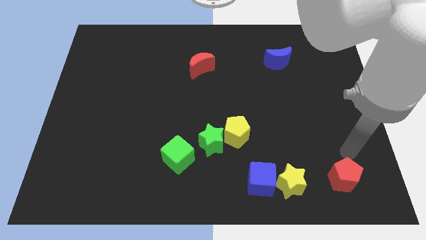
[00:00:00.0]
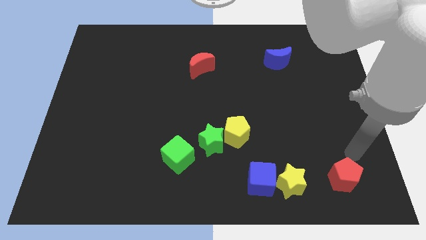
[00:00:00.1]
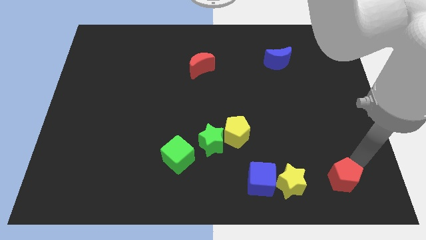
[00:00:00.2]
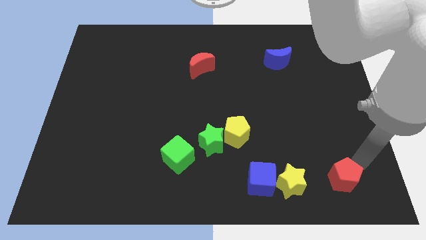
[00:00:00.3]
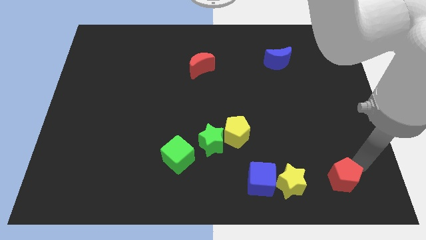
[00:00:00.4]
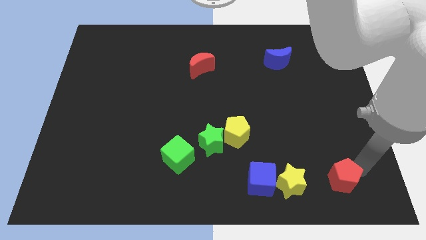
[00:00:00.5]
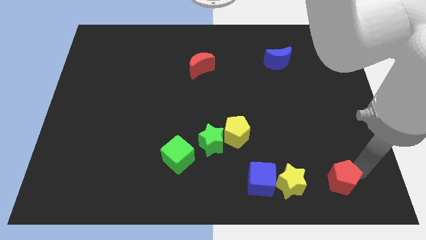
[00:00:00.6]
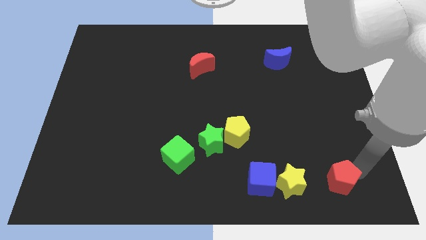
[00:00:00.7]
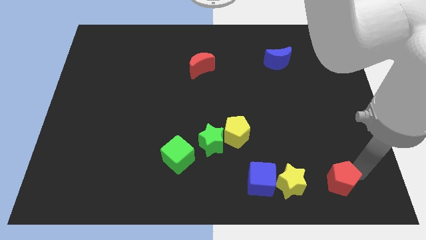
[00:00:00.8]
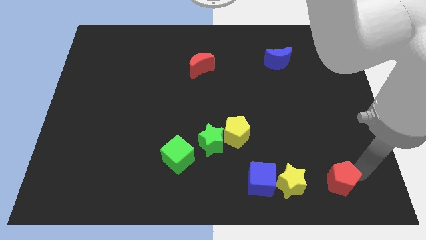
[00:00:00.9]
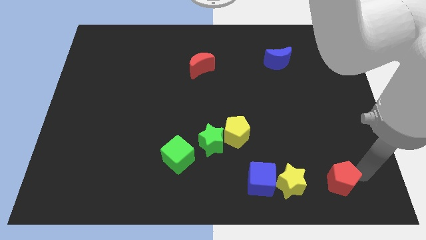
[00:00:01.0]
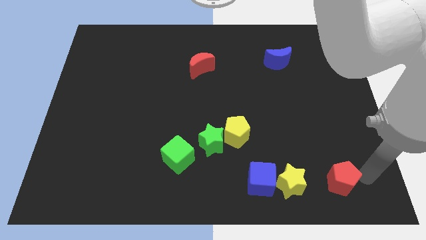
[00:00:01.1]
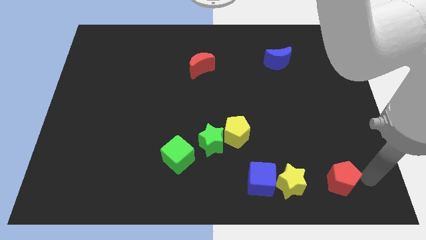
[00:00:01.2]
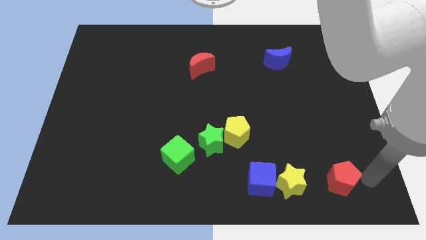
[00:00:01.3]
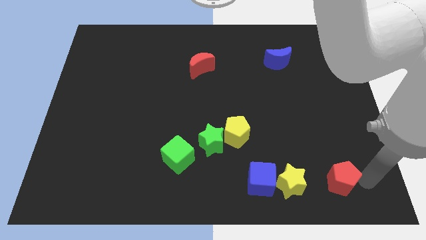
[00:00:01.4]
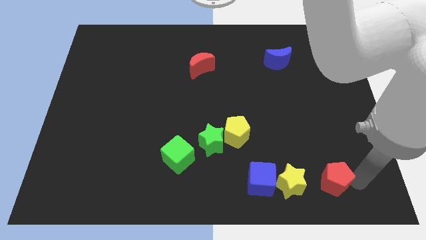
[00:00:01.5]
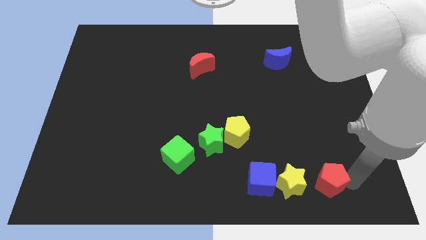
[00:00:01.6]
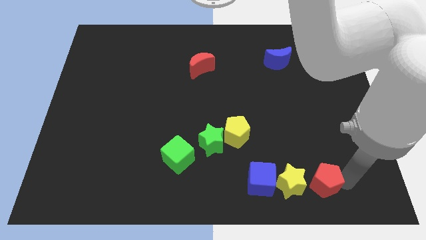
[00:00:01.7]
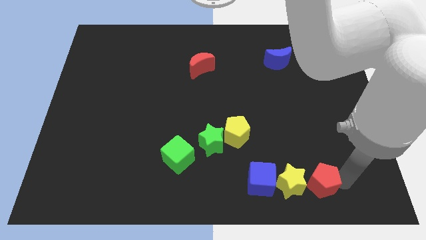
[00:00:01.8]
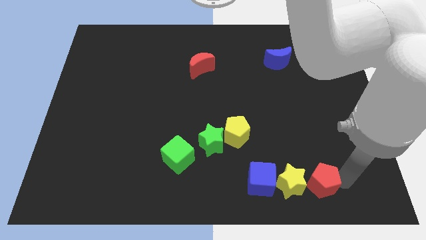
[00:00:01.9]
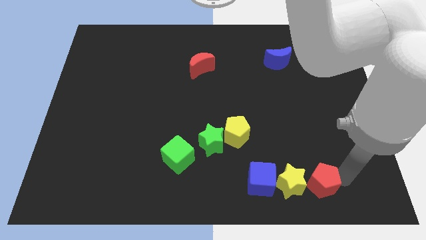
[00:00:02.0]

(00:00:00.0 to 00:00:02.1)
push the red pentagon close to the yellow star

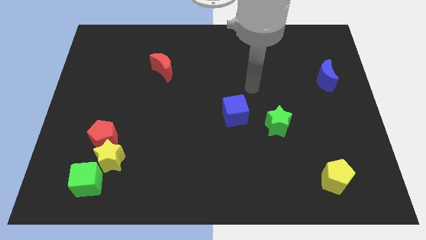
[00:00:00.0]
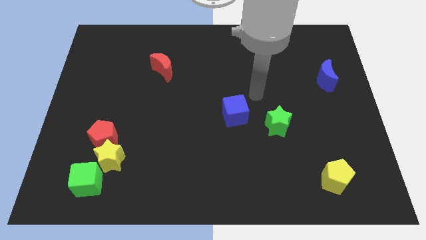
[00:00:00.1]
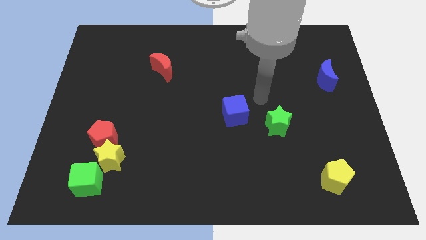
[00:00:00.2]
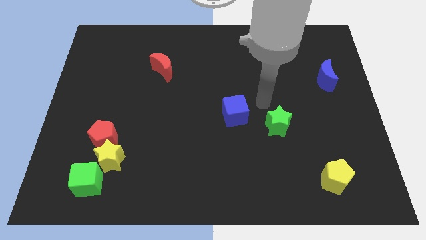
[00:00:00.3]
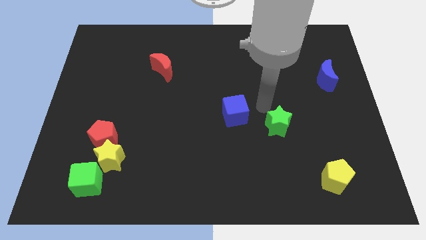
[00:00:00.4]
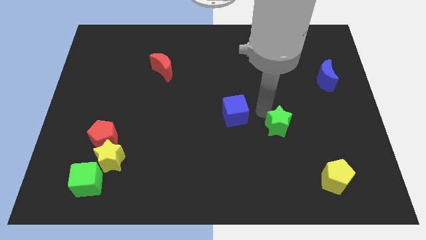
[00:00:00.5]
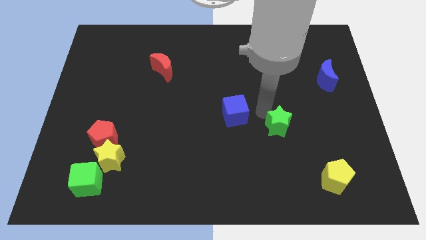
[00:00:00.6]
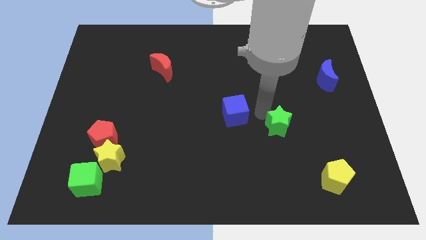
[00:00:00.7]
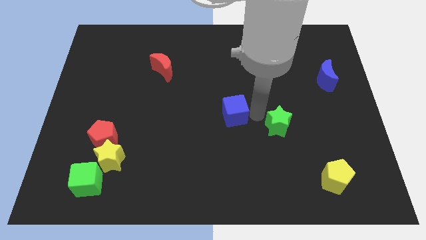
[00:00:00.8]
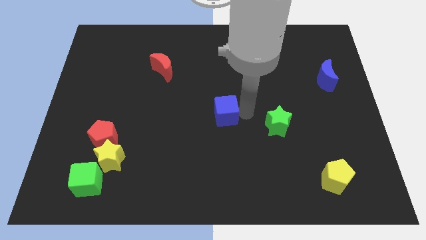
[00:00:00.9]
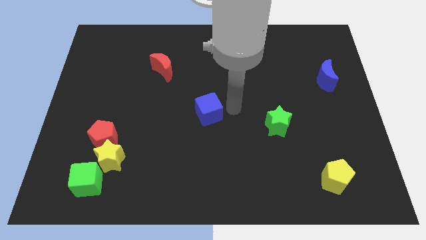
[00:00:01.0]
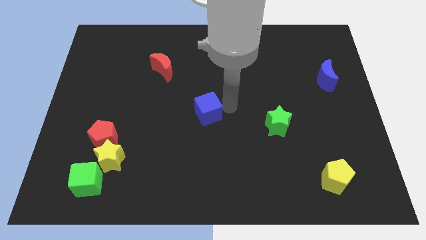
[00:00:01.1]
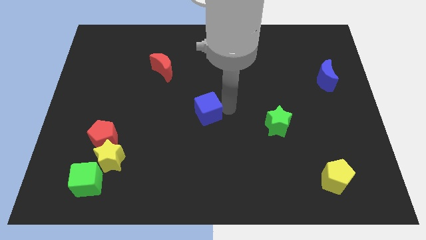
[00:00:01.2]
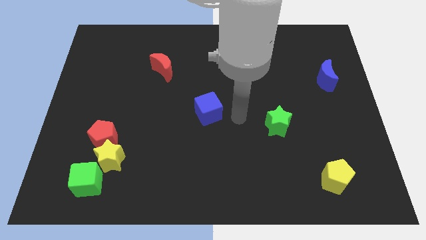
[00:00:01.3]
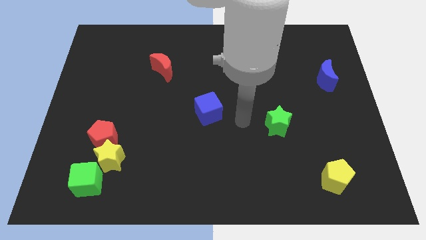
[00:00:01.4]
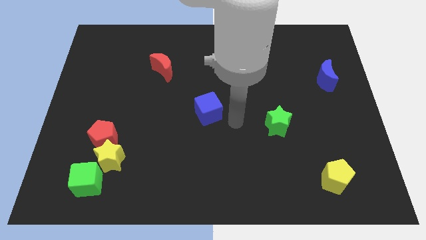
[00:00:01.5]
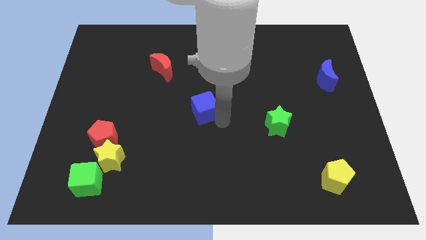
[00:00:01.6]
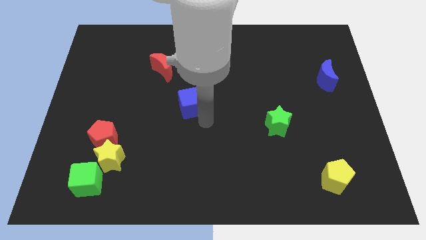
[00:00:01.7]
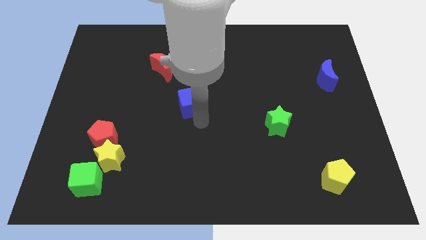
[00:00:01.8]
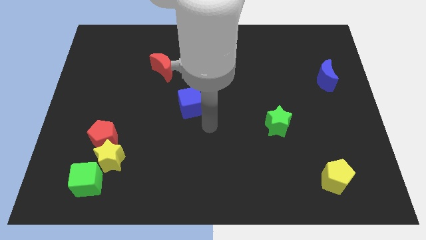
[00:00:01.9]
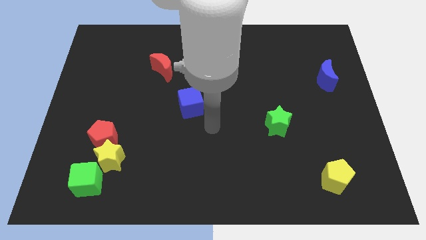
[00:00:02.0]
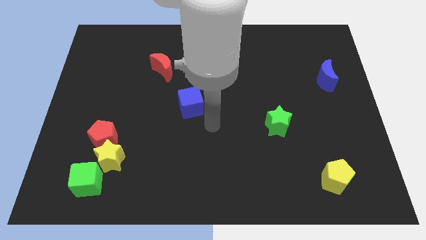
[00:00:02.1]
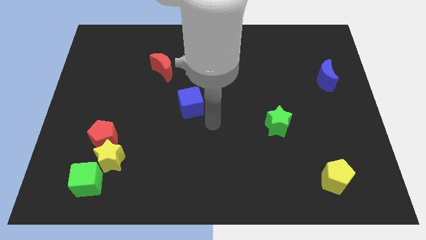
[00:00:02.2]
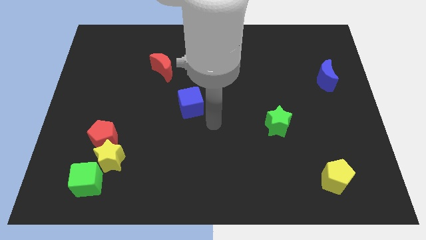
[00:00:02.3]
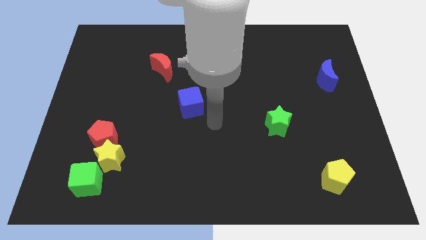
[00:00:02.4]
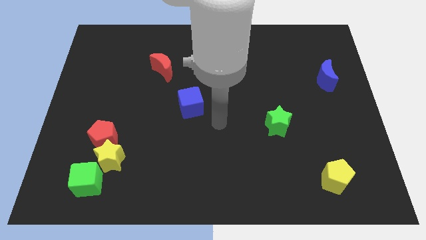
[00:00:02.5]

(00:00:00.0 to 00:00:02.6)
move the blue cube left side diagonally to red moon

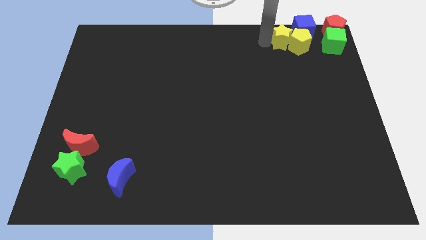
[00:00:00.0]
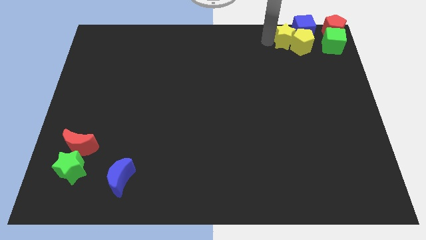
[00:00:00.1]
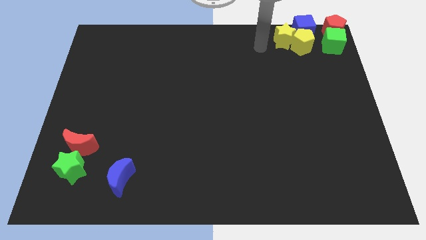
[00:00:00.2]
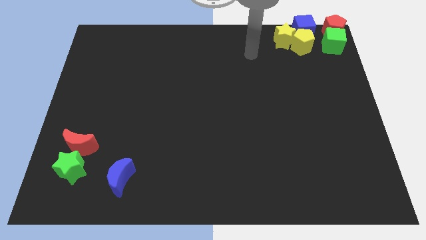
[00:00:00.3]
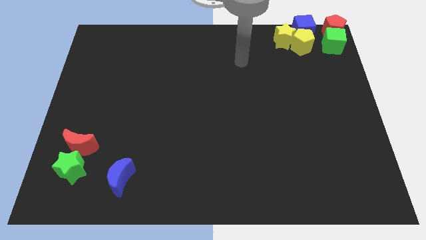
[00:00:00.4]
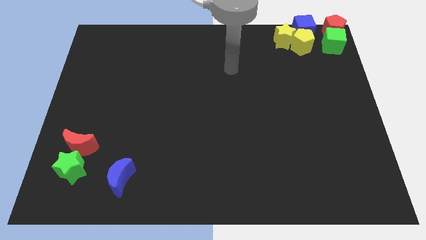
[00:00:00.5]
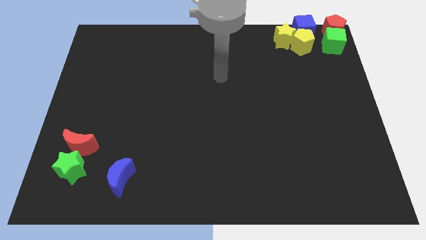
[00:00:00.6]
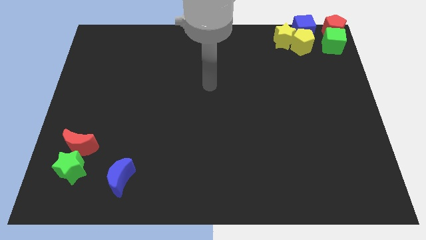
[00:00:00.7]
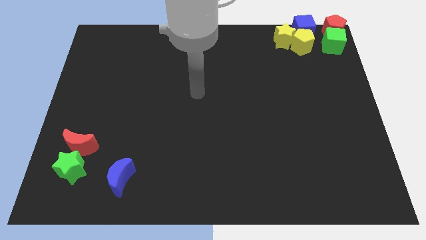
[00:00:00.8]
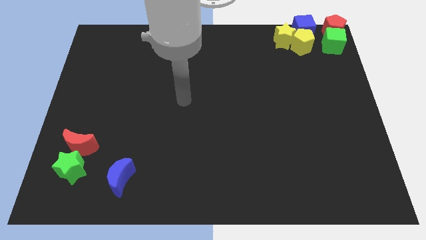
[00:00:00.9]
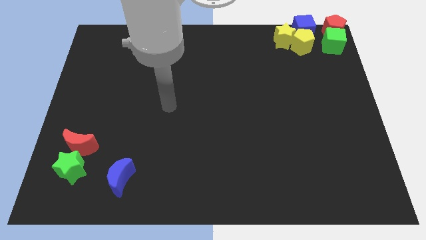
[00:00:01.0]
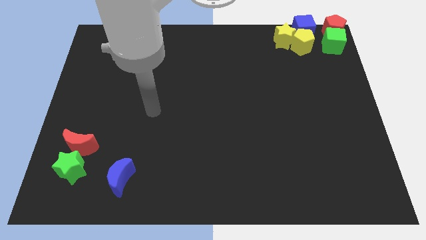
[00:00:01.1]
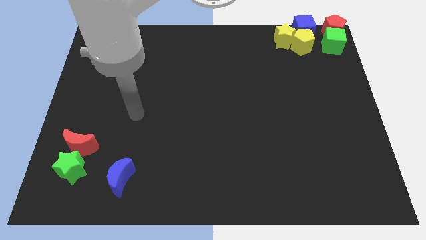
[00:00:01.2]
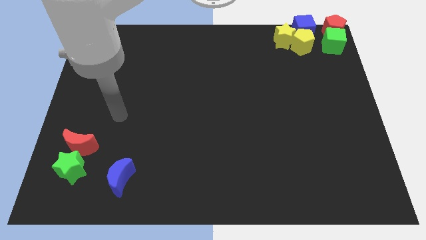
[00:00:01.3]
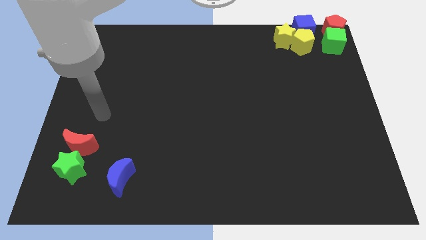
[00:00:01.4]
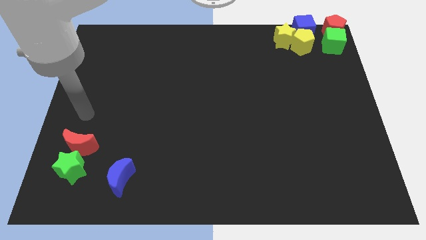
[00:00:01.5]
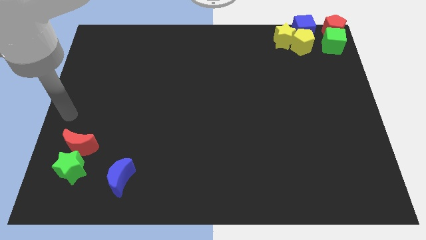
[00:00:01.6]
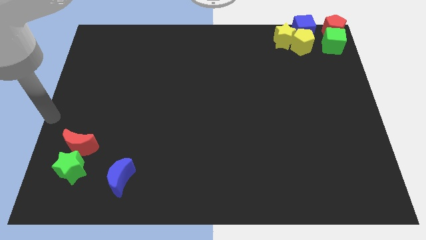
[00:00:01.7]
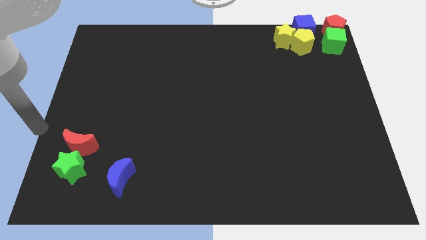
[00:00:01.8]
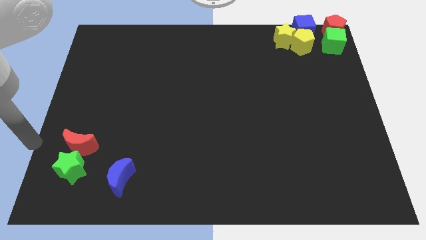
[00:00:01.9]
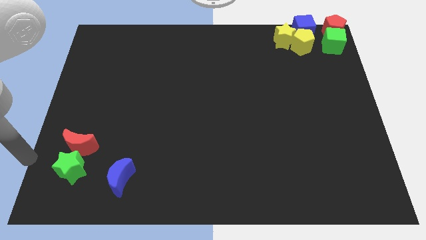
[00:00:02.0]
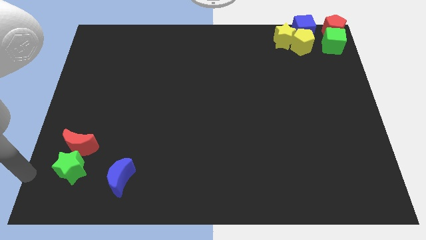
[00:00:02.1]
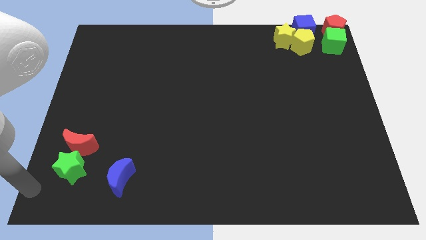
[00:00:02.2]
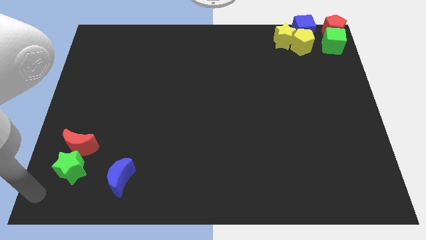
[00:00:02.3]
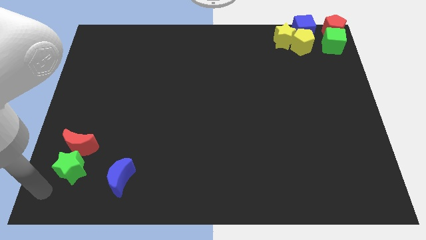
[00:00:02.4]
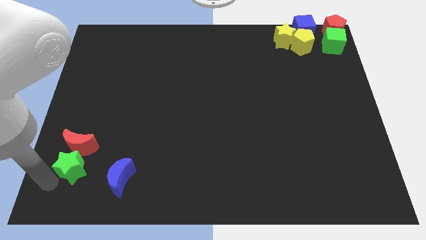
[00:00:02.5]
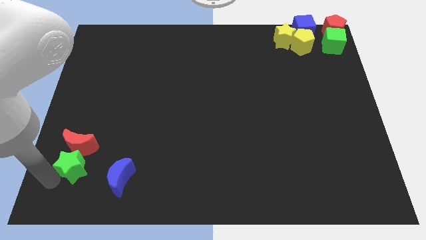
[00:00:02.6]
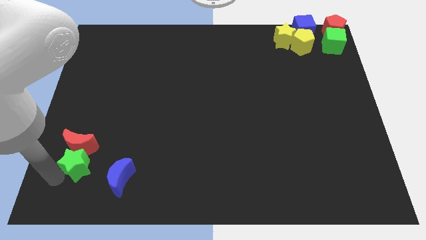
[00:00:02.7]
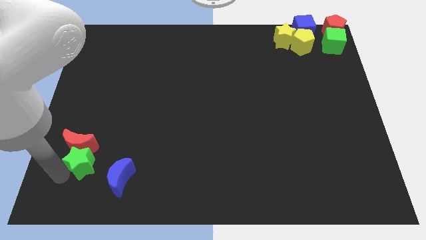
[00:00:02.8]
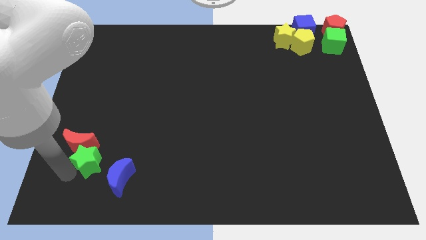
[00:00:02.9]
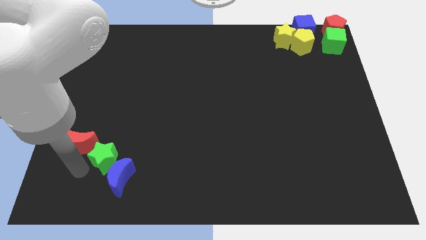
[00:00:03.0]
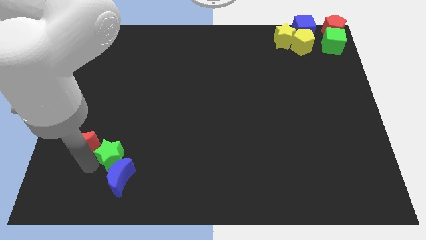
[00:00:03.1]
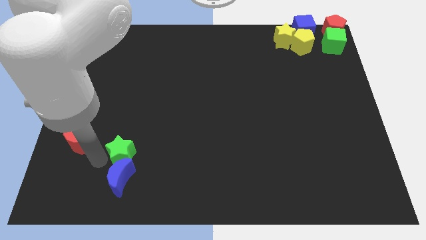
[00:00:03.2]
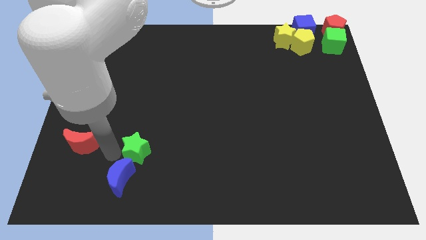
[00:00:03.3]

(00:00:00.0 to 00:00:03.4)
move the green star to the top of blue crescent

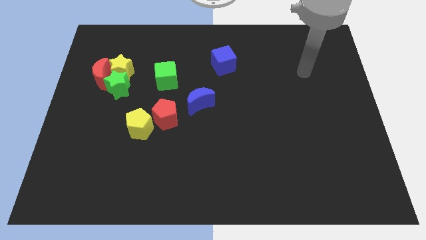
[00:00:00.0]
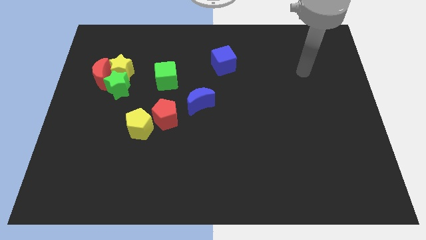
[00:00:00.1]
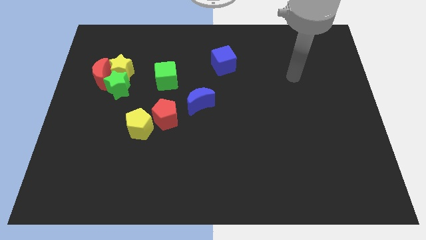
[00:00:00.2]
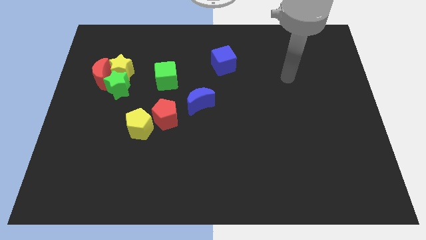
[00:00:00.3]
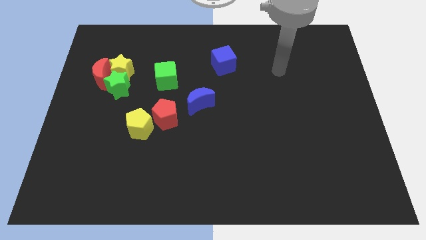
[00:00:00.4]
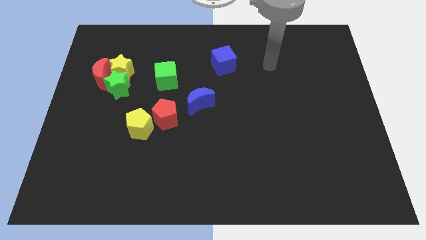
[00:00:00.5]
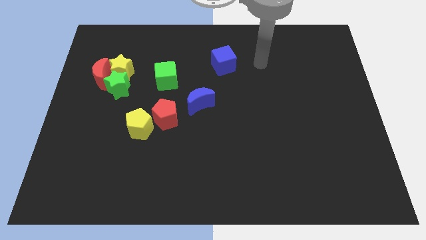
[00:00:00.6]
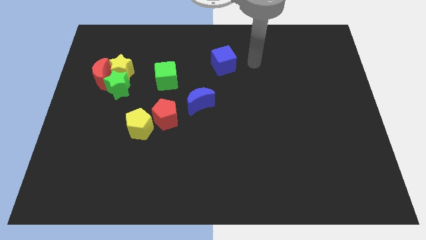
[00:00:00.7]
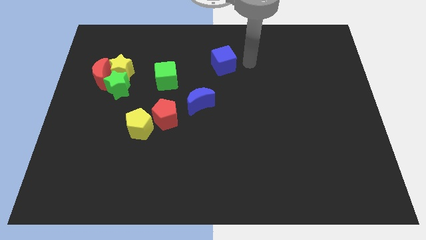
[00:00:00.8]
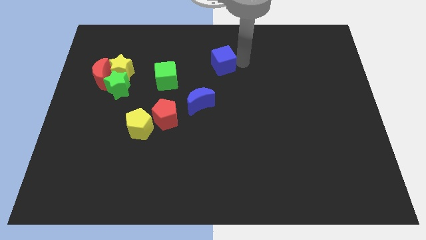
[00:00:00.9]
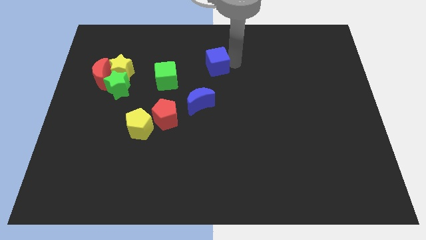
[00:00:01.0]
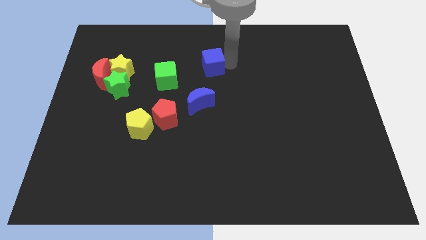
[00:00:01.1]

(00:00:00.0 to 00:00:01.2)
slightly push the blue cube parallel to the top center
